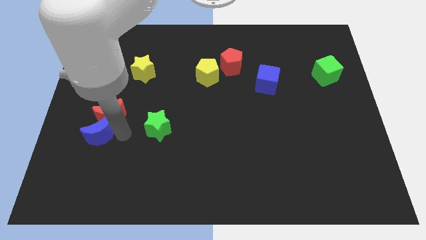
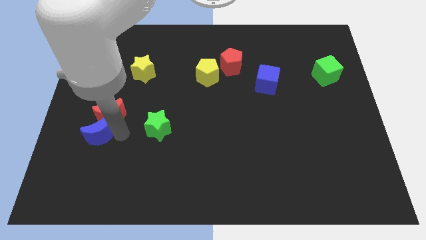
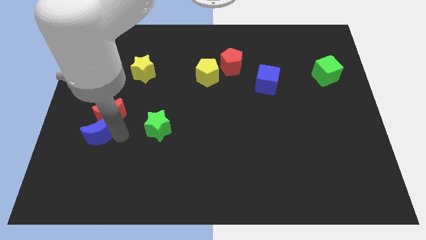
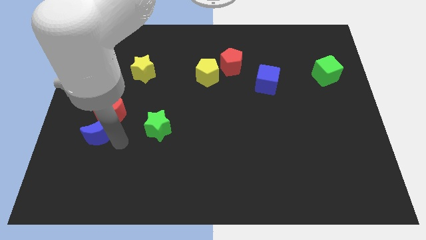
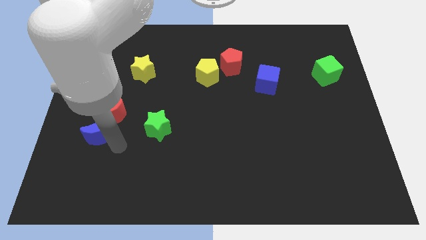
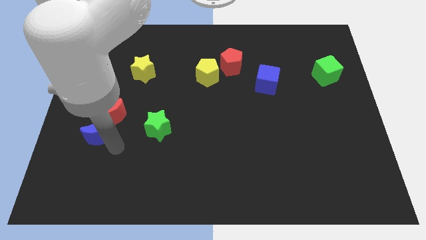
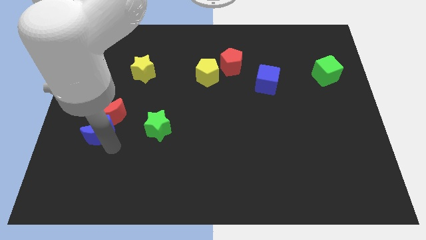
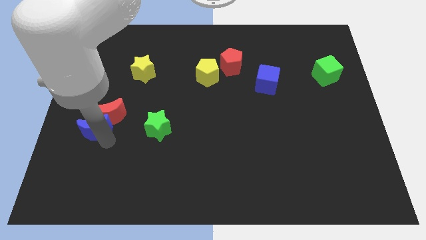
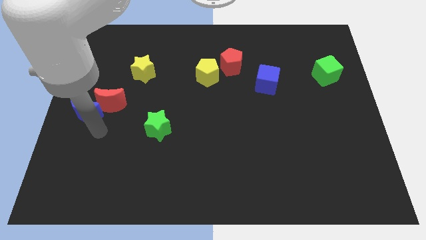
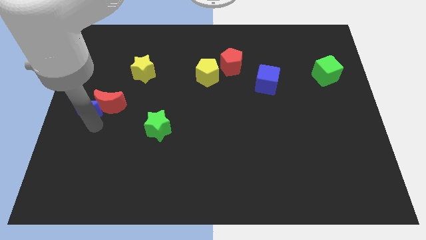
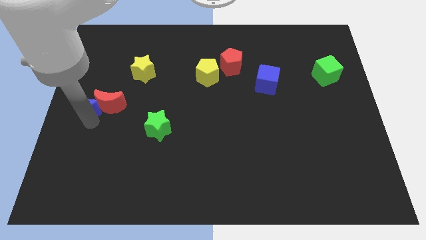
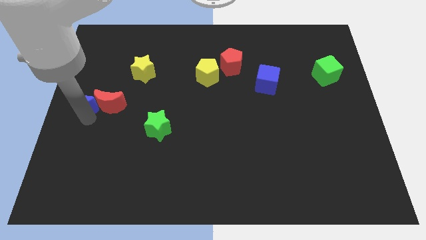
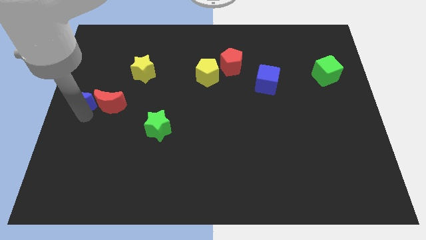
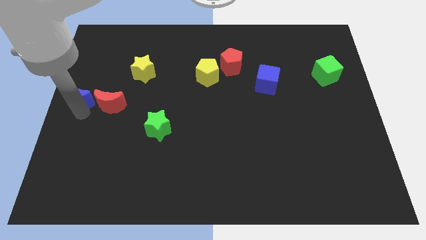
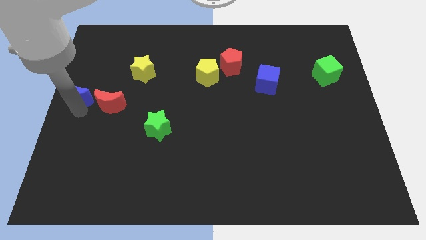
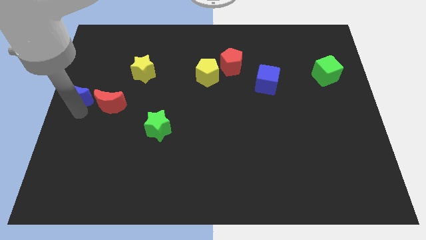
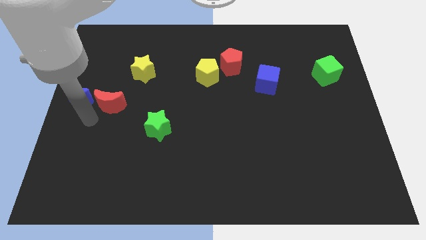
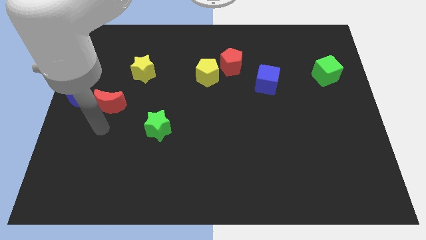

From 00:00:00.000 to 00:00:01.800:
separate blue moon and red moon

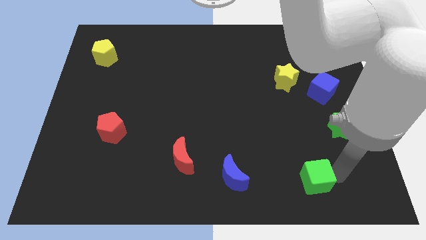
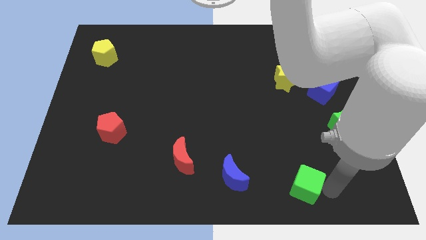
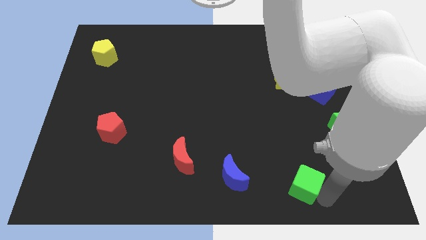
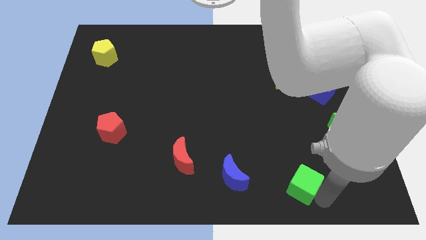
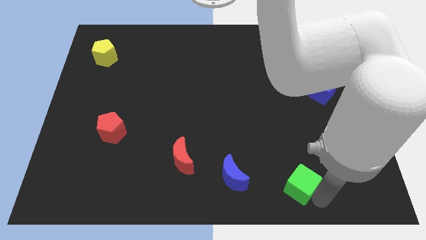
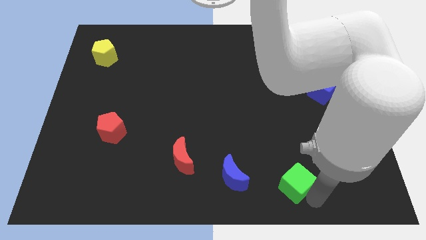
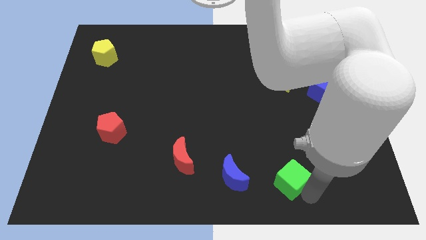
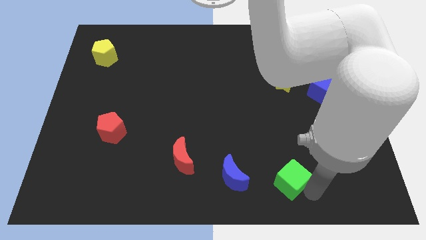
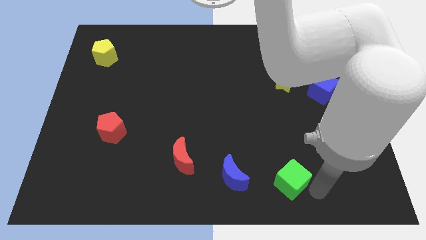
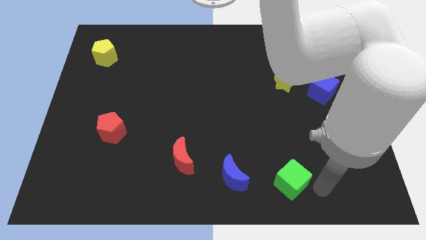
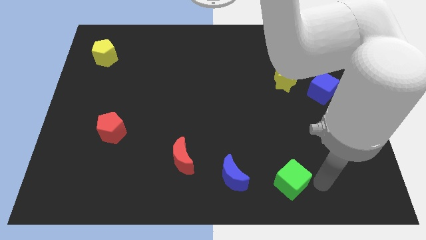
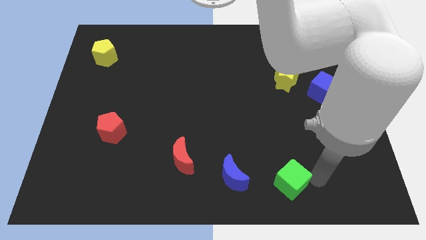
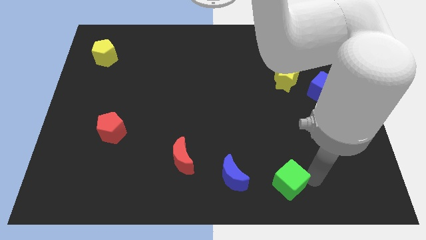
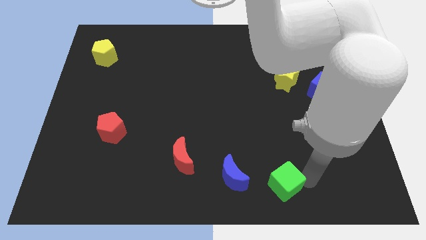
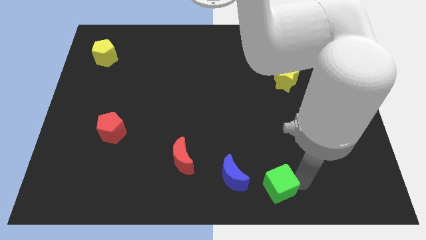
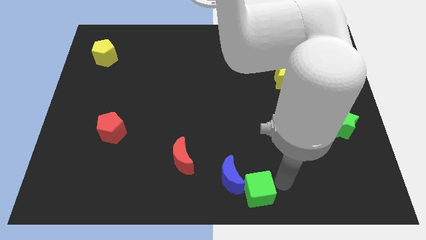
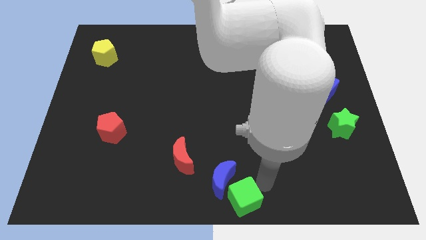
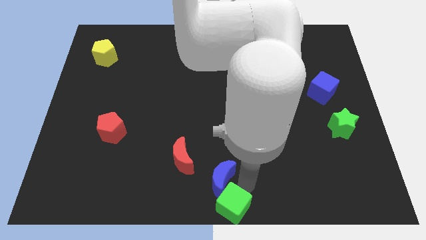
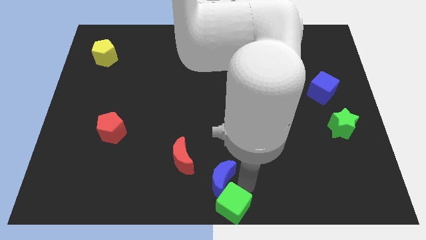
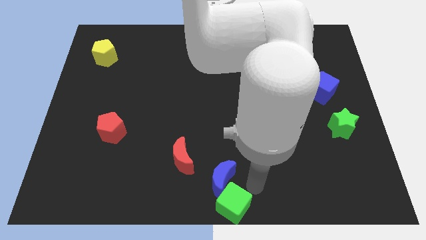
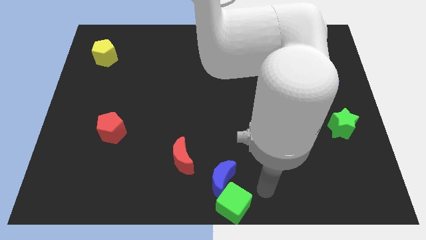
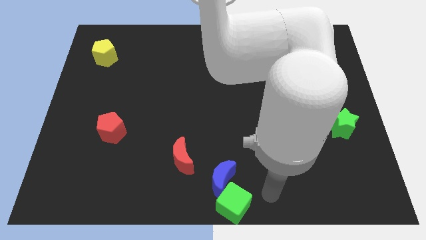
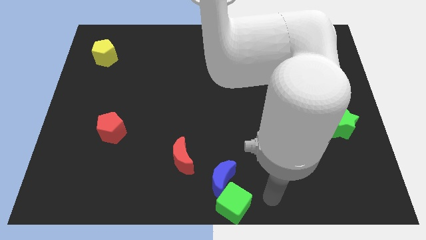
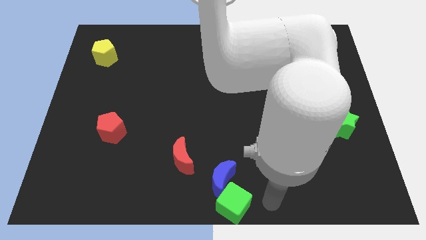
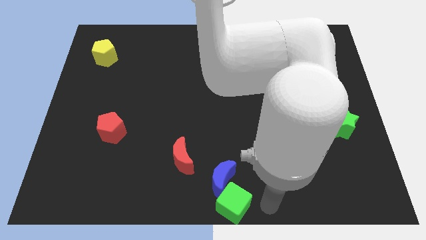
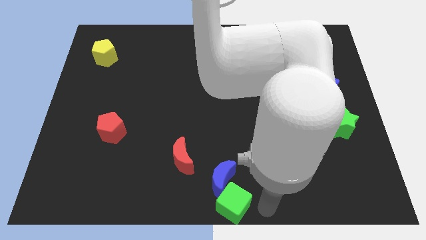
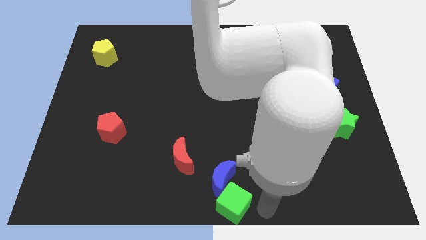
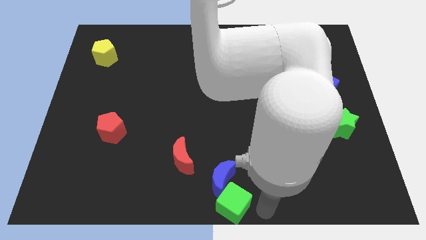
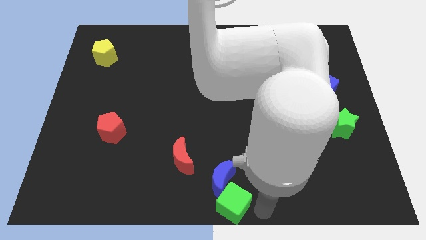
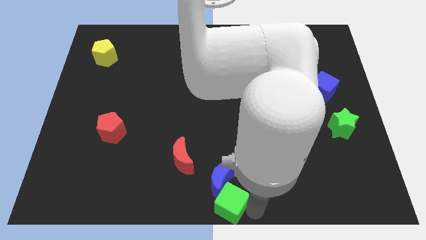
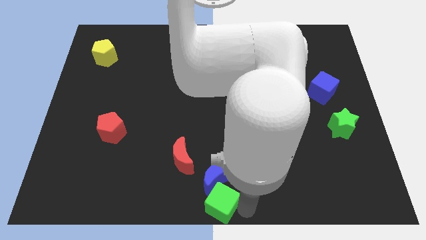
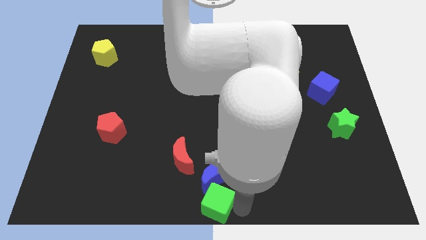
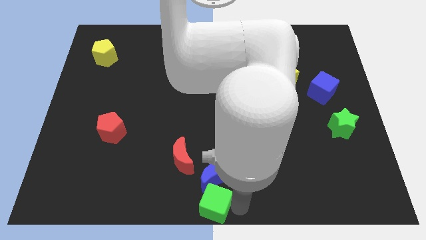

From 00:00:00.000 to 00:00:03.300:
push the green cube into the blue moon

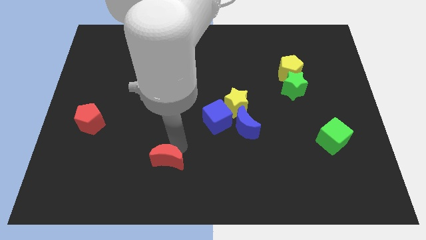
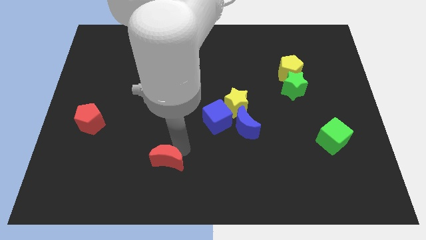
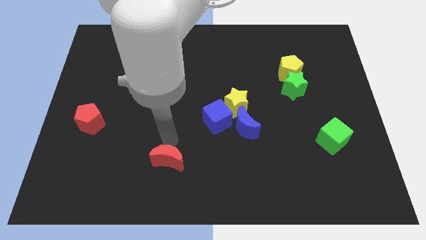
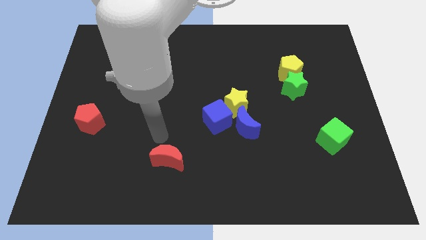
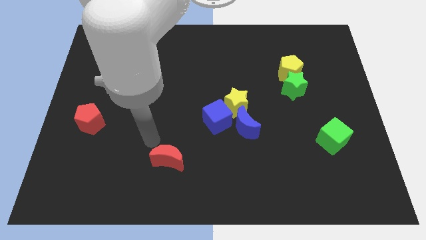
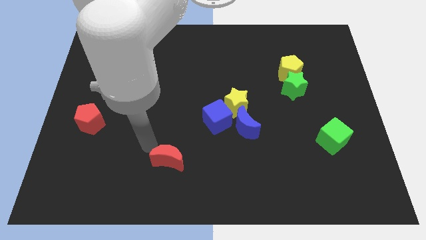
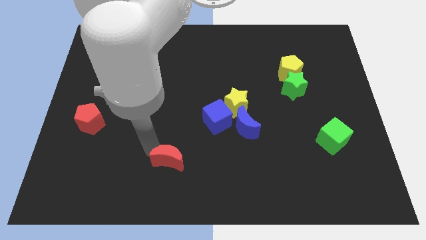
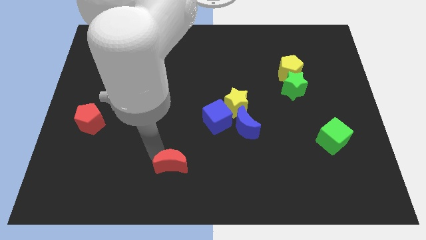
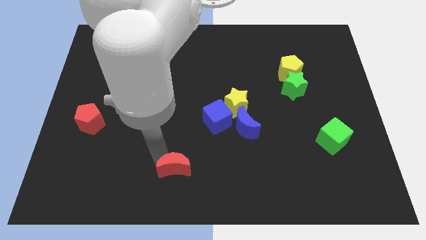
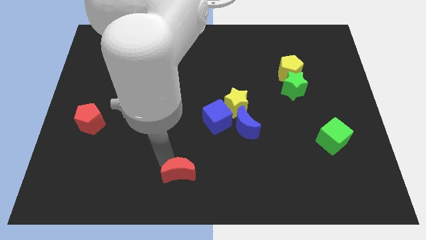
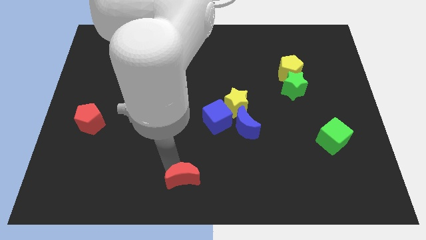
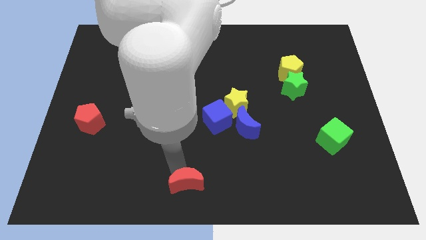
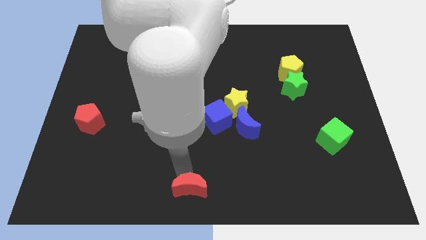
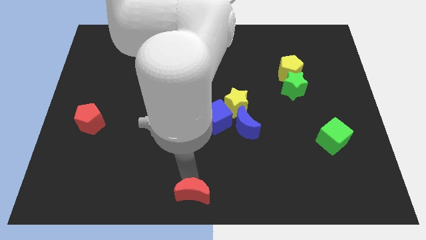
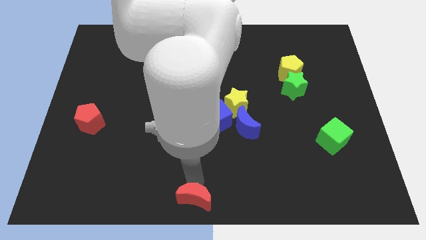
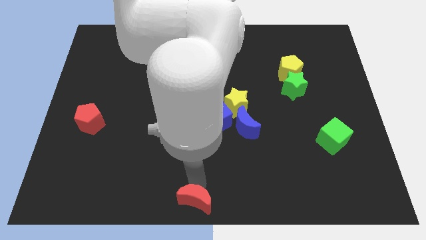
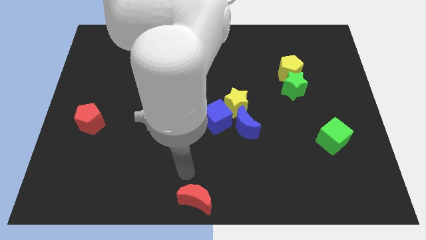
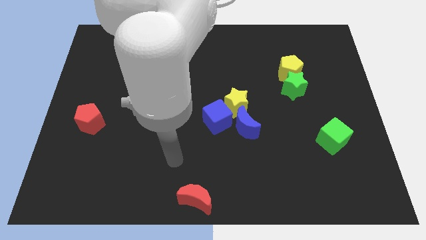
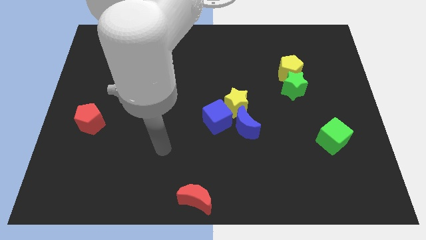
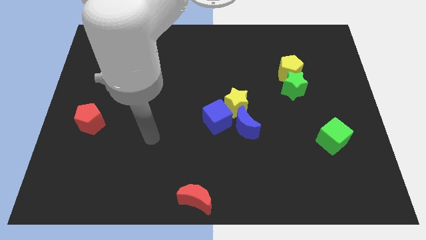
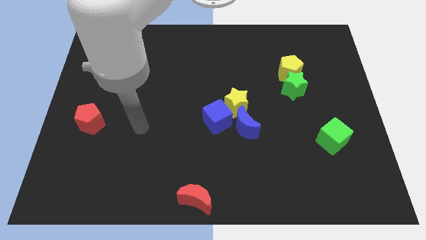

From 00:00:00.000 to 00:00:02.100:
place the red moon to the bottom center of the board

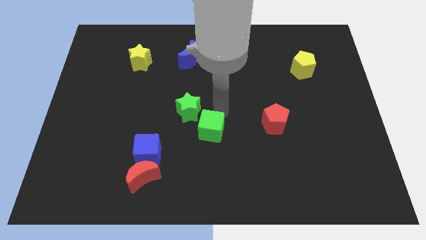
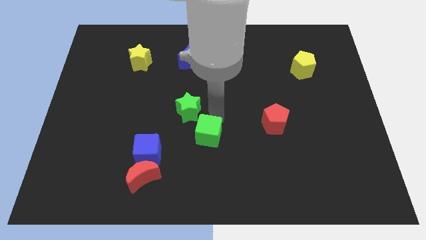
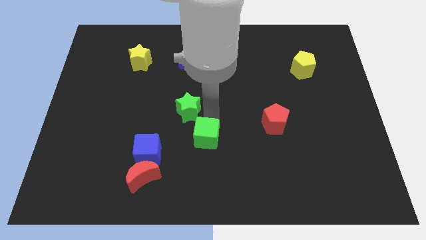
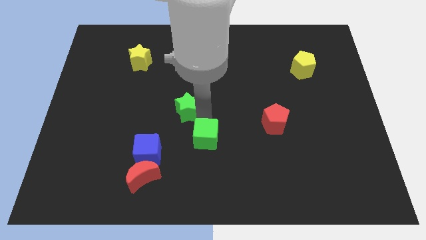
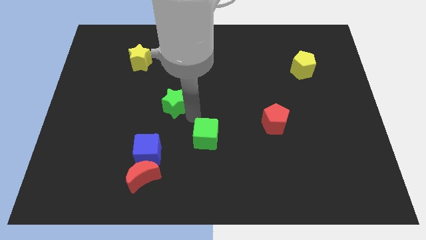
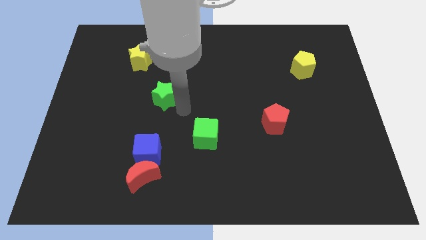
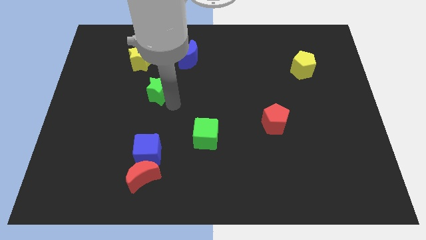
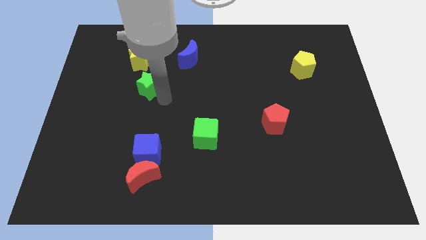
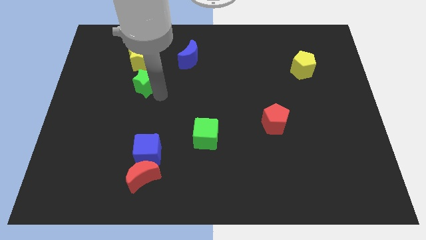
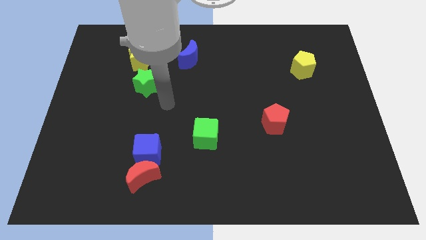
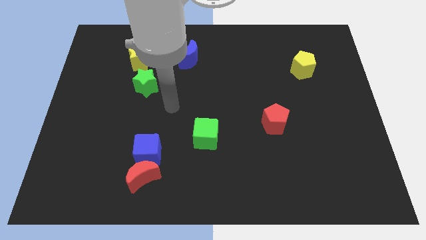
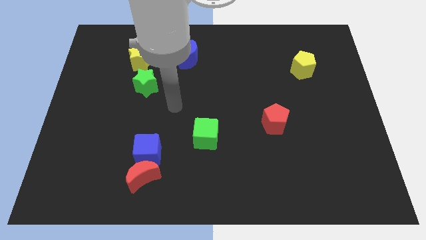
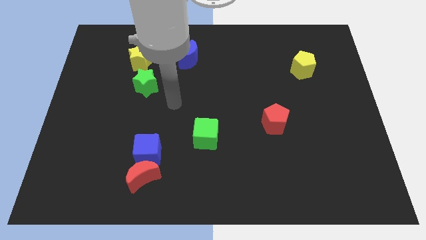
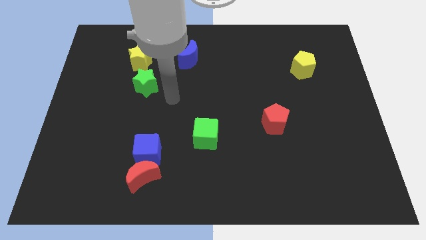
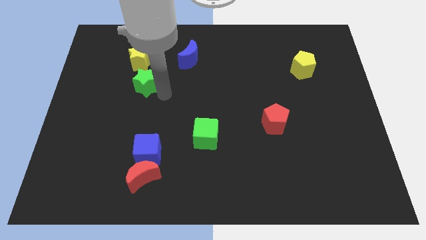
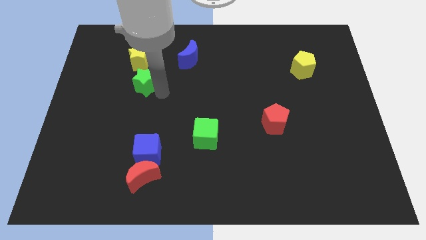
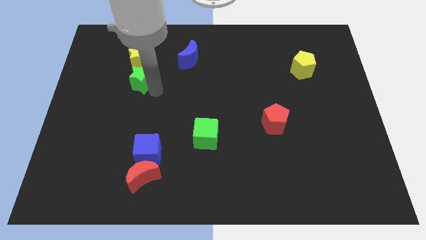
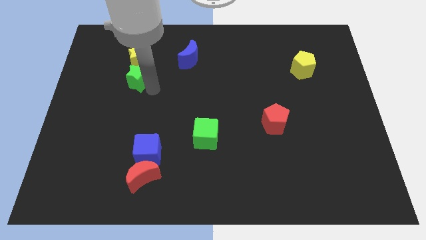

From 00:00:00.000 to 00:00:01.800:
push the green star on the bottom of yellow star
